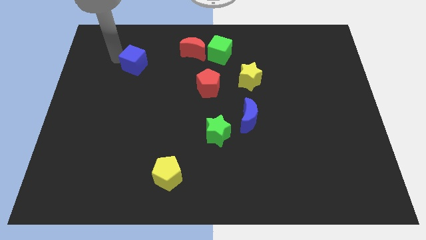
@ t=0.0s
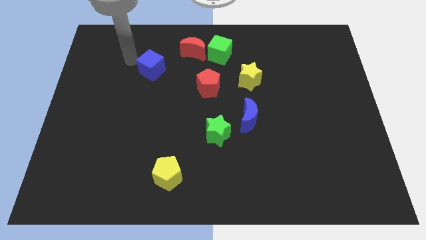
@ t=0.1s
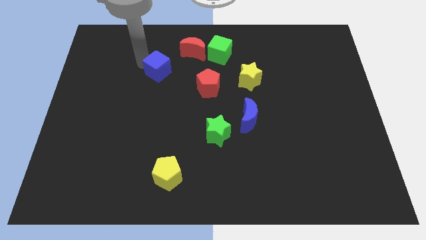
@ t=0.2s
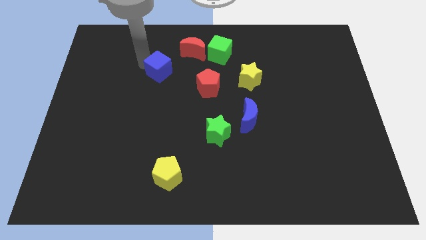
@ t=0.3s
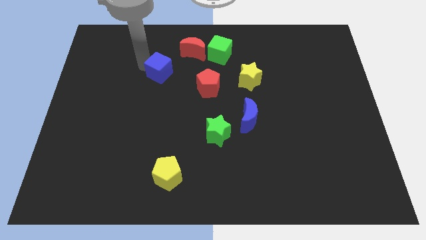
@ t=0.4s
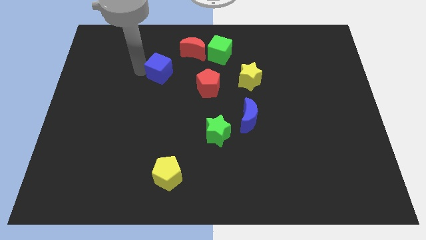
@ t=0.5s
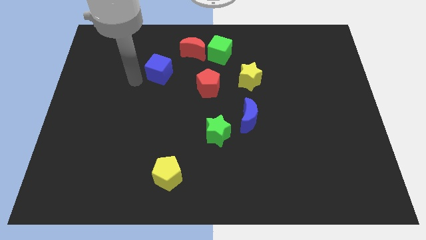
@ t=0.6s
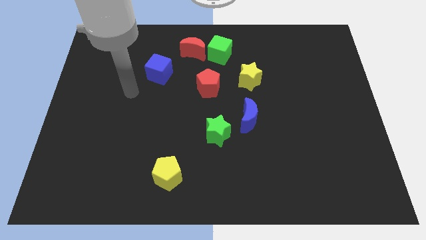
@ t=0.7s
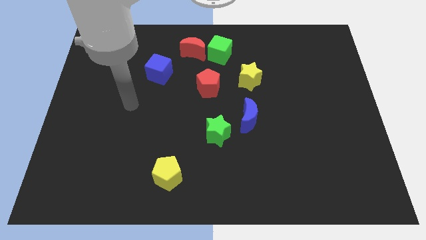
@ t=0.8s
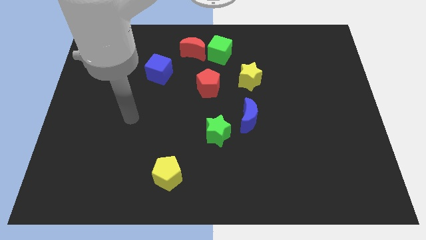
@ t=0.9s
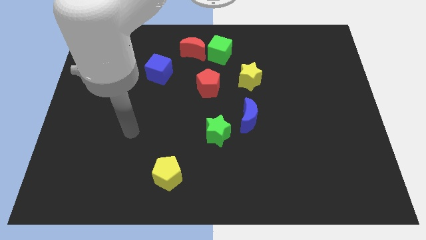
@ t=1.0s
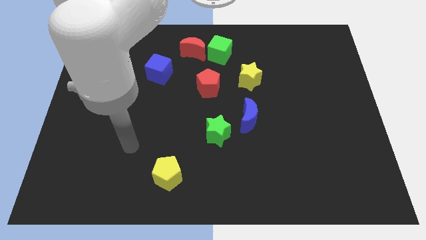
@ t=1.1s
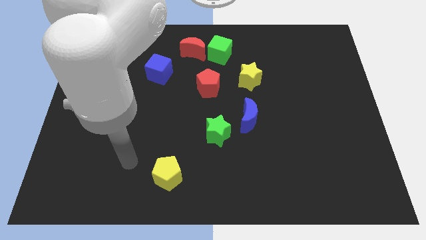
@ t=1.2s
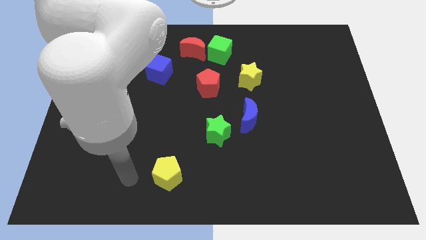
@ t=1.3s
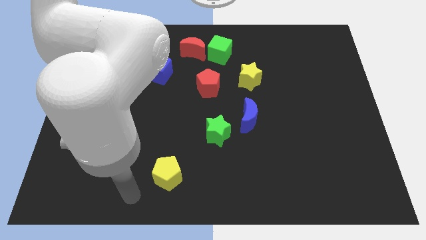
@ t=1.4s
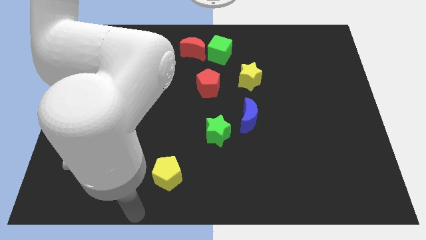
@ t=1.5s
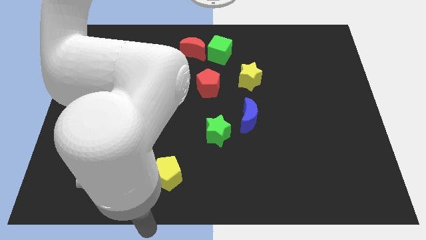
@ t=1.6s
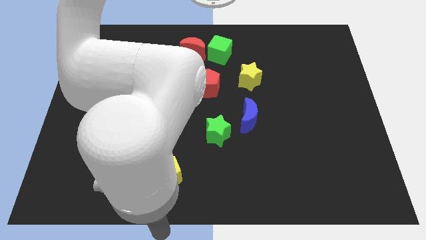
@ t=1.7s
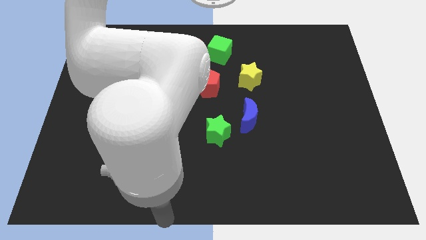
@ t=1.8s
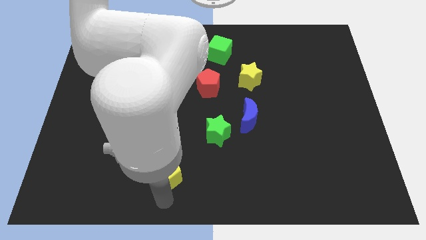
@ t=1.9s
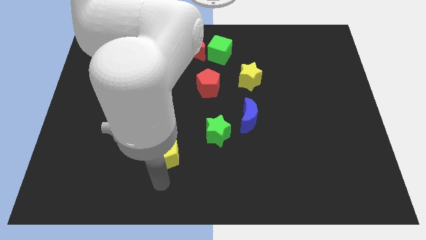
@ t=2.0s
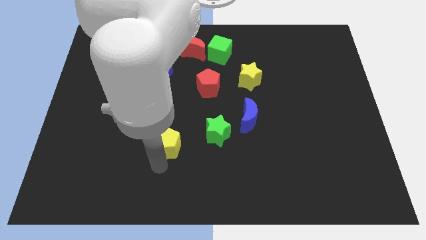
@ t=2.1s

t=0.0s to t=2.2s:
move yellow pentagon towards the blue cube

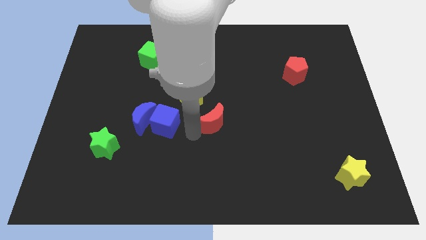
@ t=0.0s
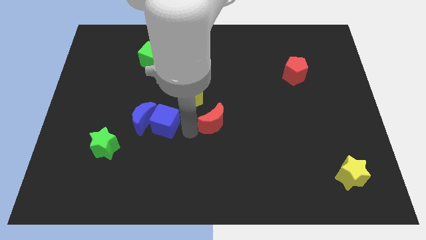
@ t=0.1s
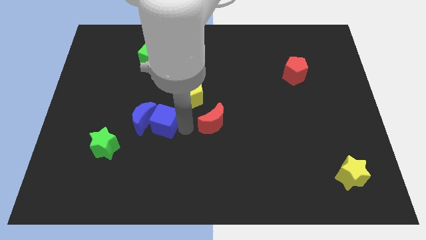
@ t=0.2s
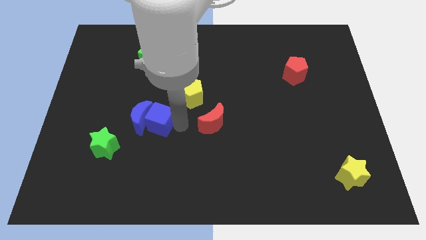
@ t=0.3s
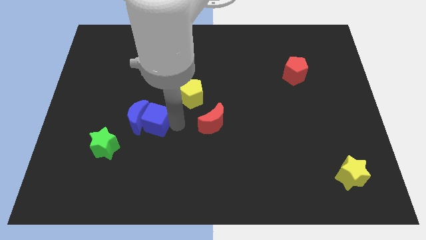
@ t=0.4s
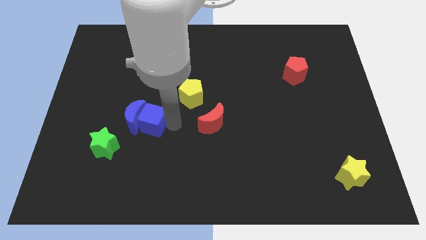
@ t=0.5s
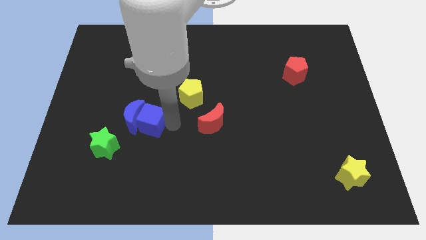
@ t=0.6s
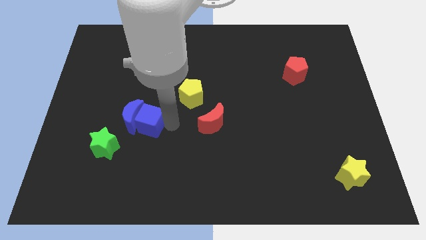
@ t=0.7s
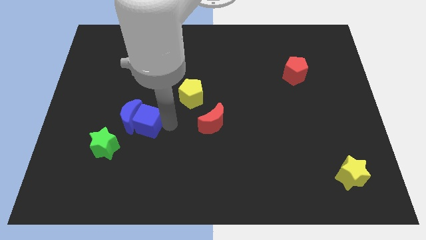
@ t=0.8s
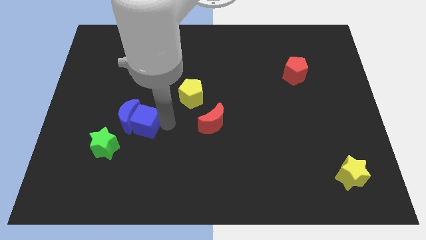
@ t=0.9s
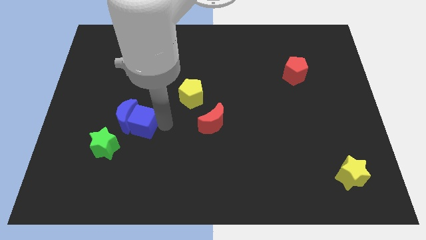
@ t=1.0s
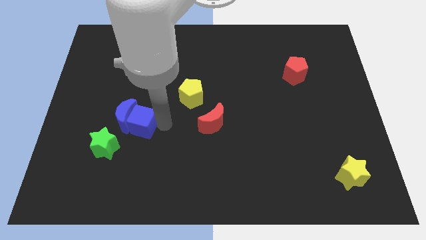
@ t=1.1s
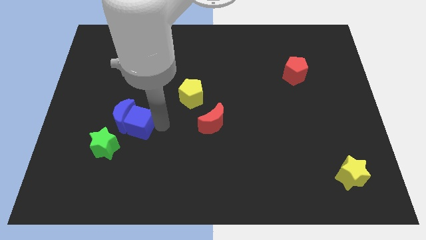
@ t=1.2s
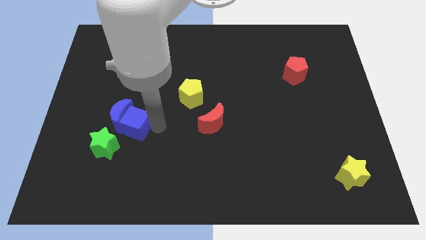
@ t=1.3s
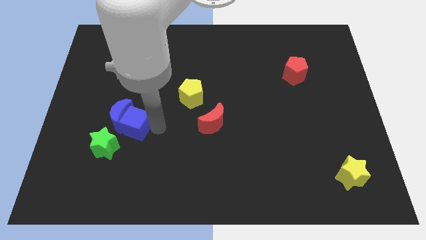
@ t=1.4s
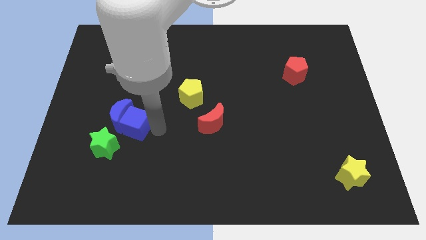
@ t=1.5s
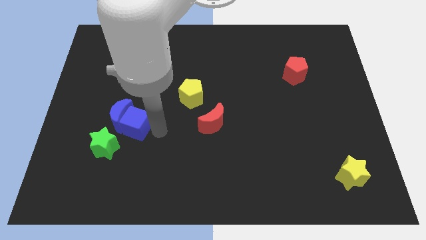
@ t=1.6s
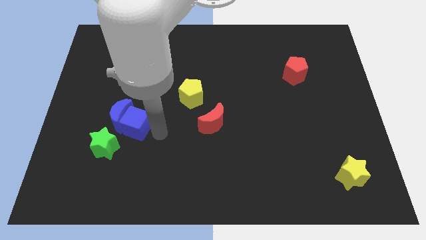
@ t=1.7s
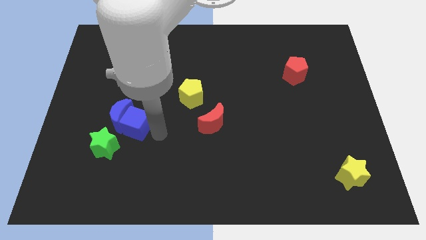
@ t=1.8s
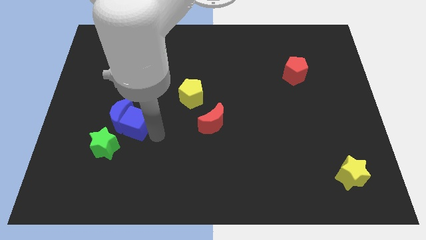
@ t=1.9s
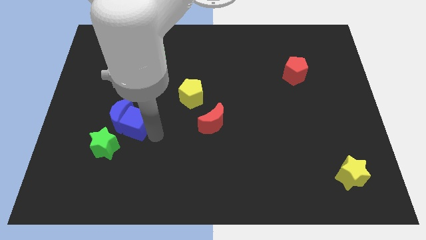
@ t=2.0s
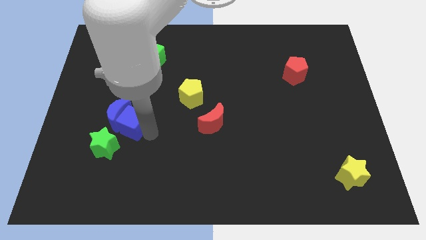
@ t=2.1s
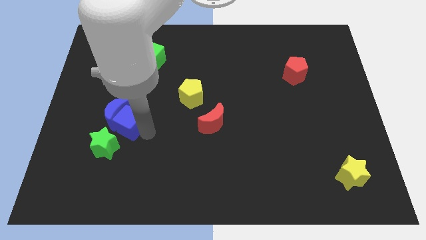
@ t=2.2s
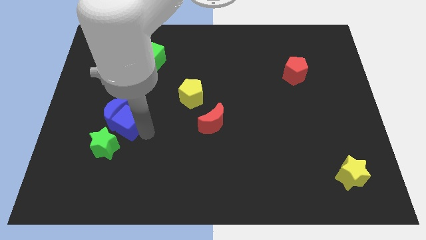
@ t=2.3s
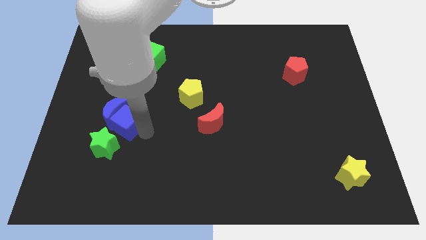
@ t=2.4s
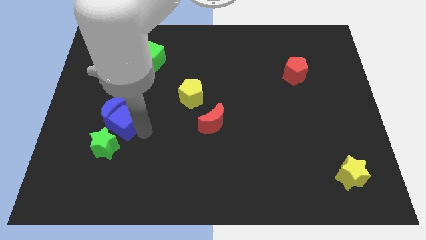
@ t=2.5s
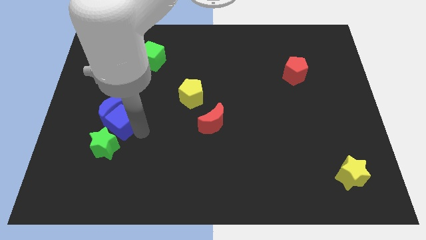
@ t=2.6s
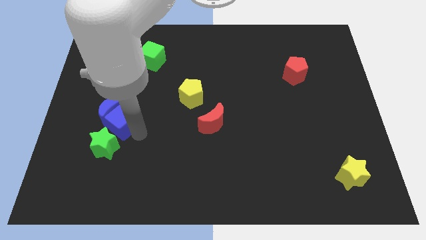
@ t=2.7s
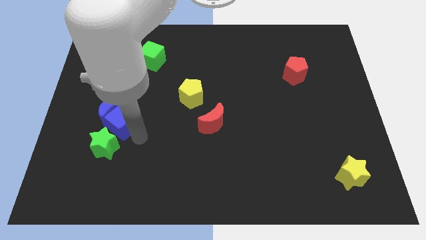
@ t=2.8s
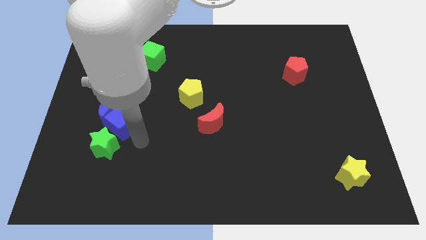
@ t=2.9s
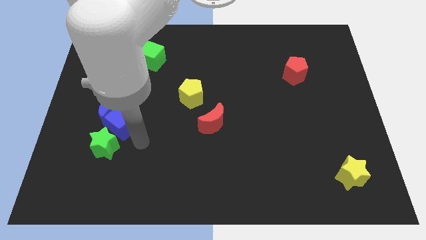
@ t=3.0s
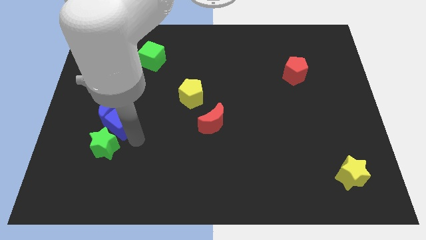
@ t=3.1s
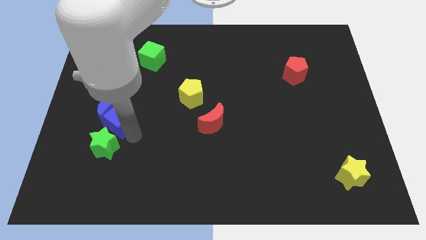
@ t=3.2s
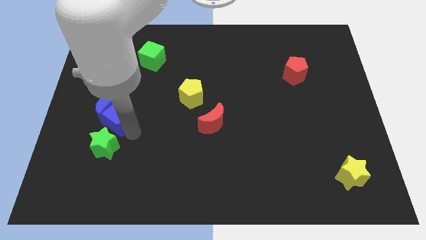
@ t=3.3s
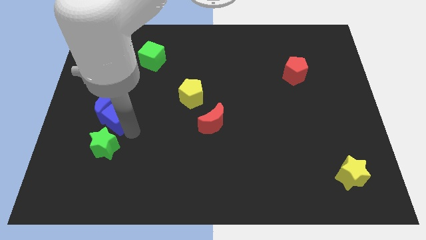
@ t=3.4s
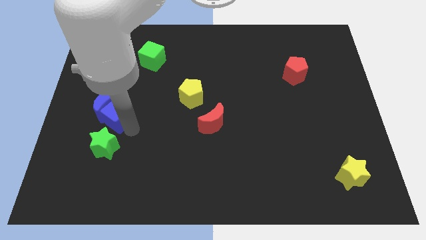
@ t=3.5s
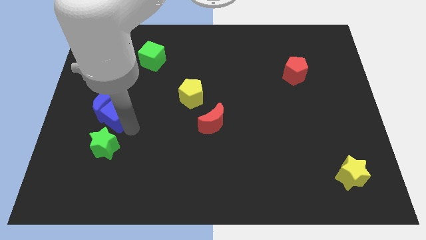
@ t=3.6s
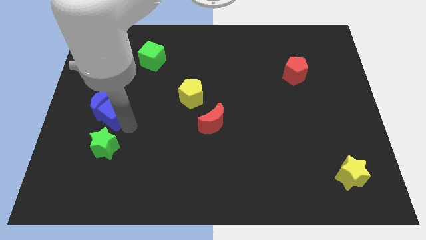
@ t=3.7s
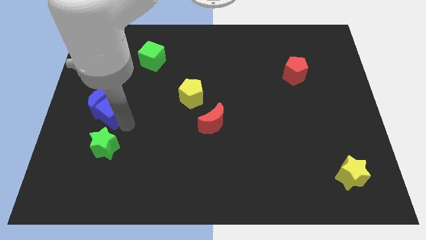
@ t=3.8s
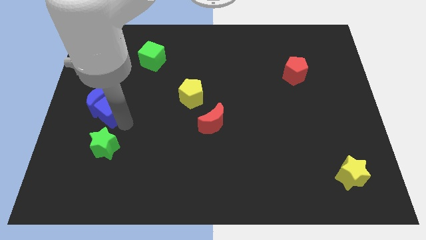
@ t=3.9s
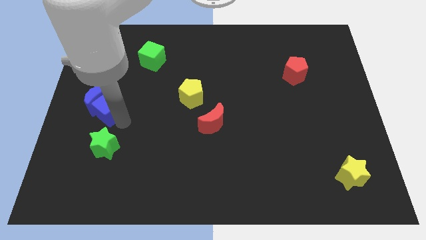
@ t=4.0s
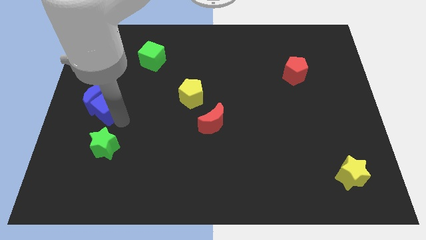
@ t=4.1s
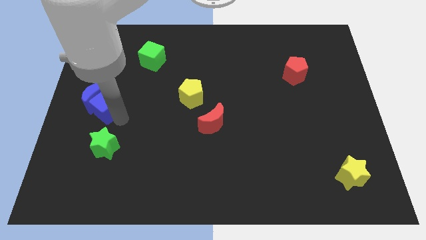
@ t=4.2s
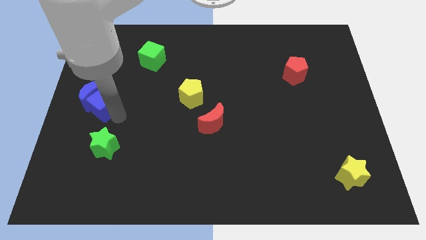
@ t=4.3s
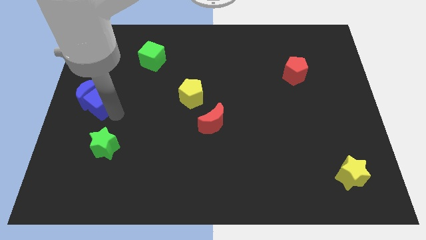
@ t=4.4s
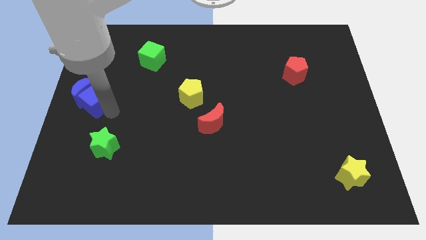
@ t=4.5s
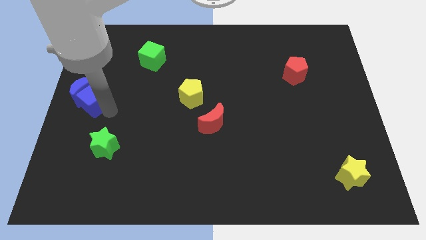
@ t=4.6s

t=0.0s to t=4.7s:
drag the blue blocks diagonally top left to the green star

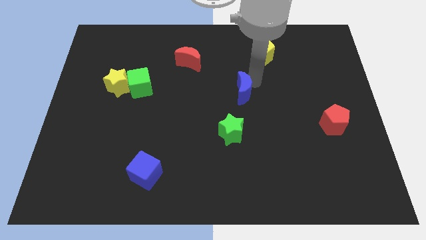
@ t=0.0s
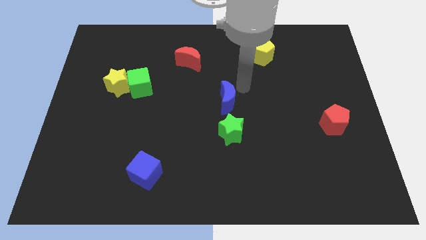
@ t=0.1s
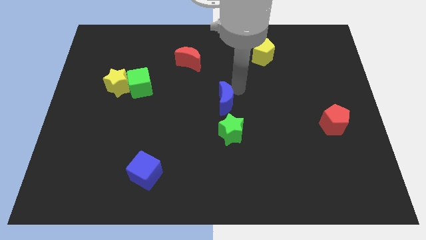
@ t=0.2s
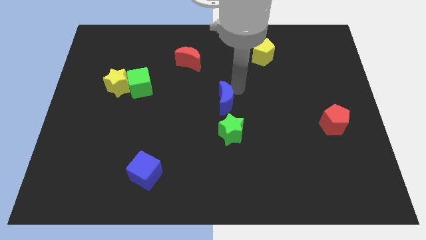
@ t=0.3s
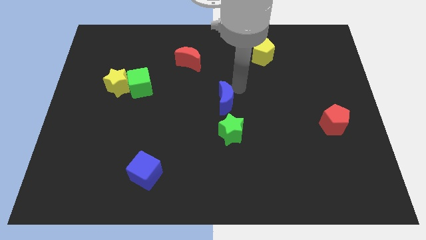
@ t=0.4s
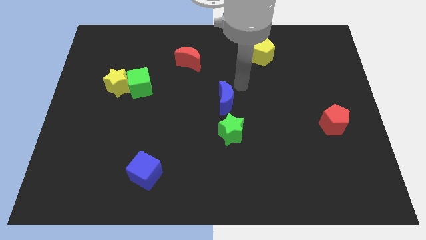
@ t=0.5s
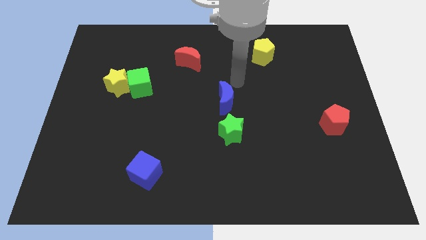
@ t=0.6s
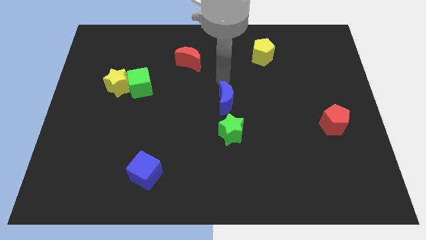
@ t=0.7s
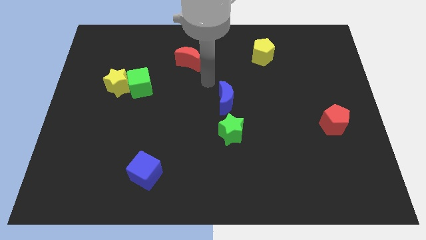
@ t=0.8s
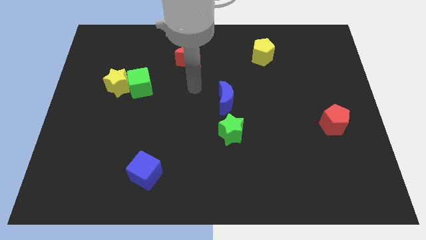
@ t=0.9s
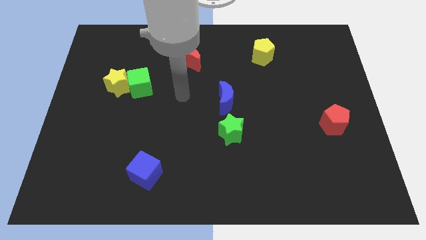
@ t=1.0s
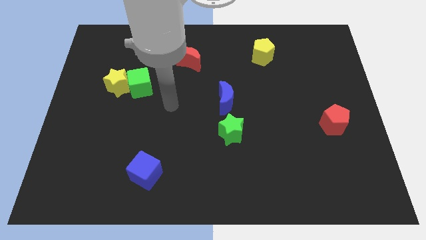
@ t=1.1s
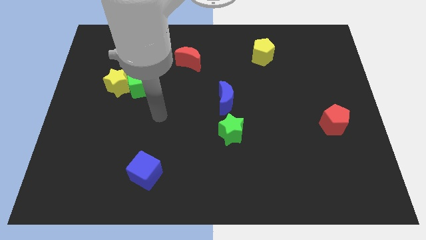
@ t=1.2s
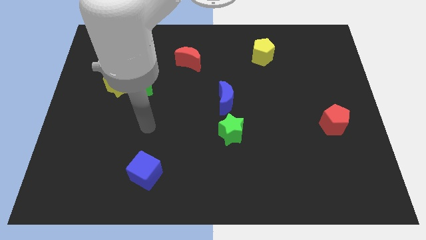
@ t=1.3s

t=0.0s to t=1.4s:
move blue moon above the green star

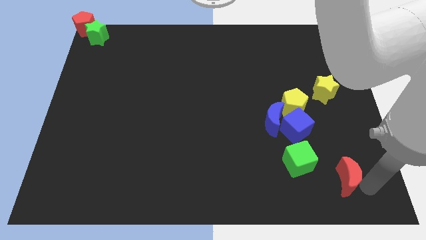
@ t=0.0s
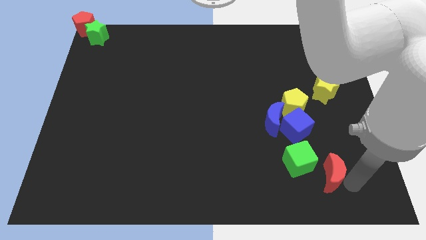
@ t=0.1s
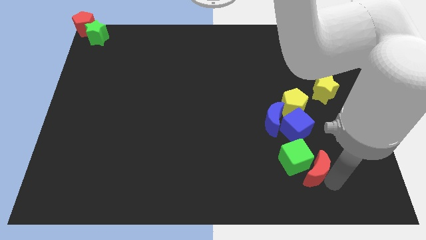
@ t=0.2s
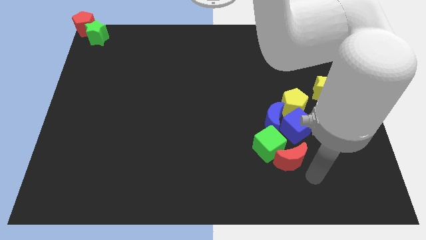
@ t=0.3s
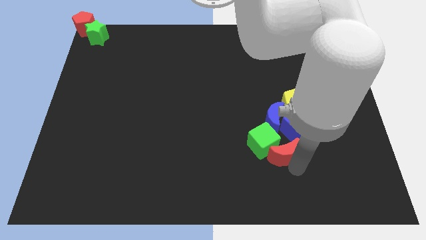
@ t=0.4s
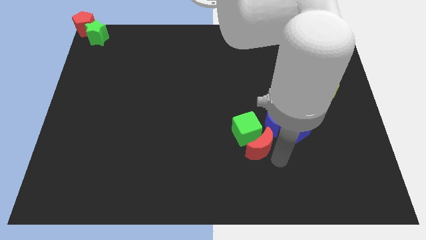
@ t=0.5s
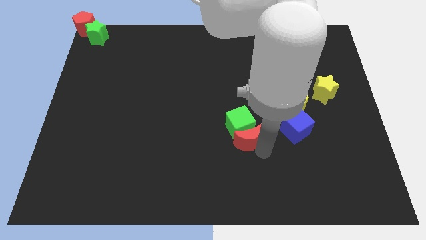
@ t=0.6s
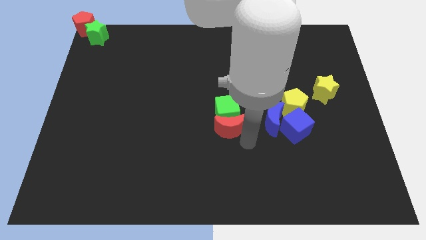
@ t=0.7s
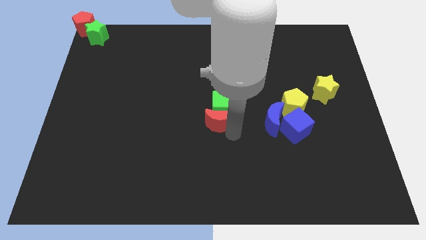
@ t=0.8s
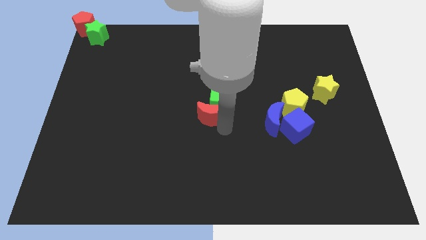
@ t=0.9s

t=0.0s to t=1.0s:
push the red crescent along with the green cube to the center of the board
